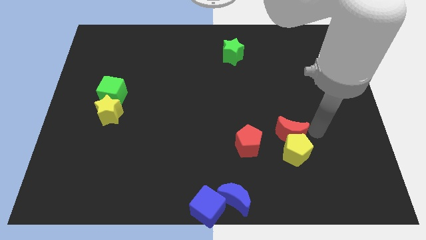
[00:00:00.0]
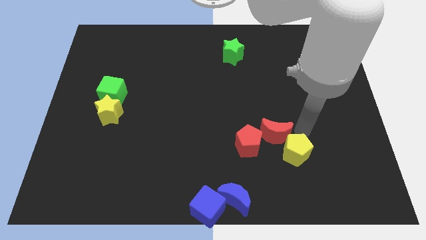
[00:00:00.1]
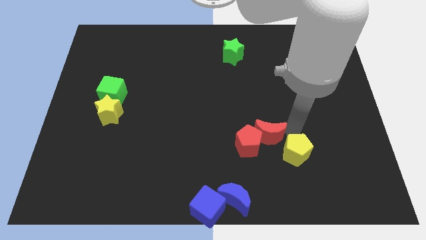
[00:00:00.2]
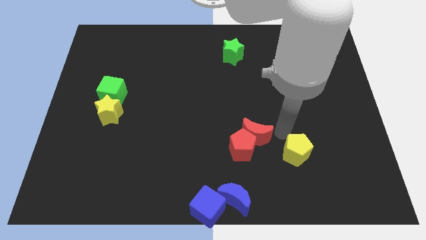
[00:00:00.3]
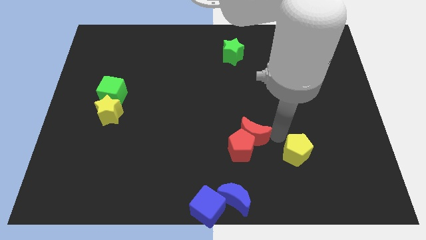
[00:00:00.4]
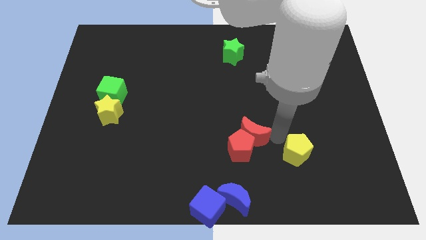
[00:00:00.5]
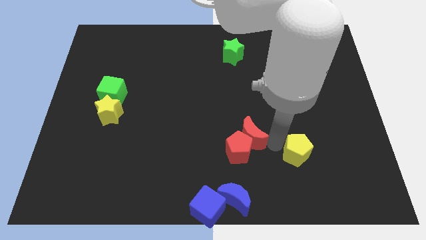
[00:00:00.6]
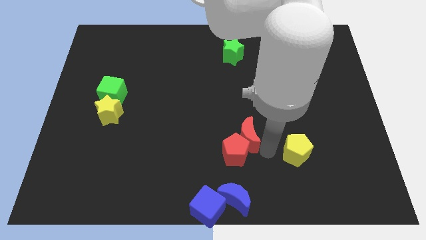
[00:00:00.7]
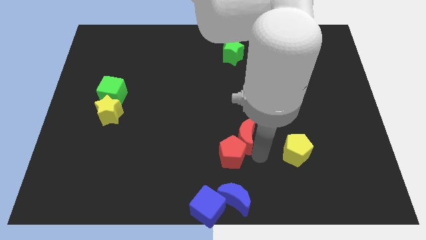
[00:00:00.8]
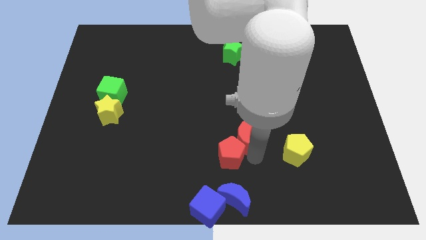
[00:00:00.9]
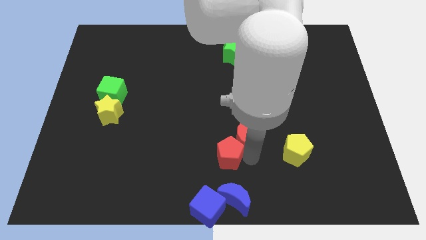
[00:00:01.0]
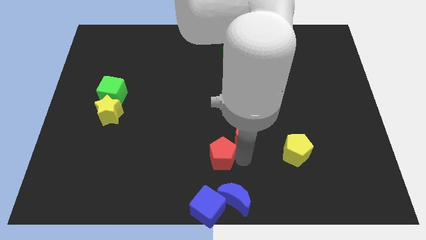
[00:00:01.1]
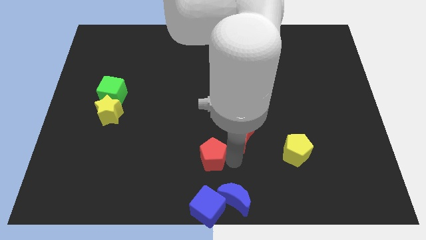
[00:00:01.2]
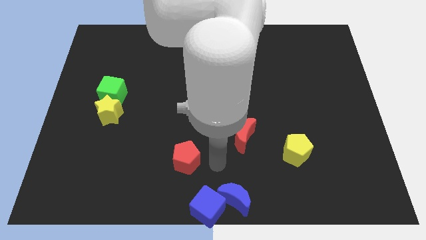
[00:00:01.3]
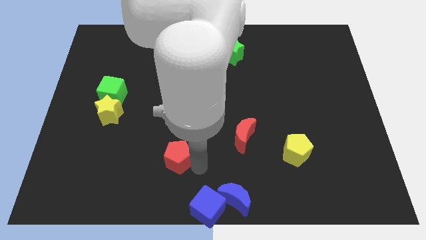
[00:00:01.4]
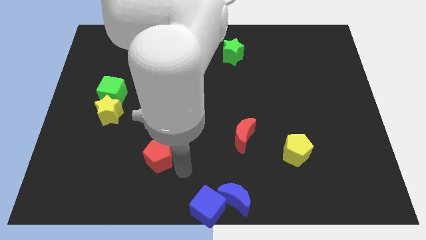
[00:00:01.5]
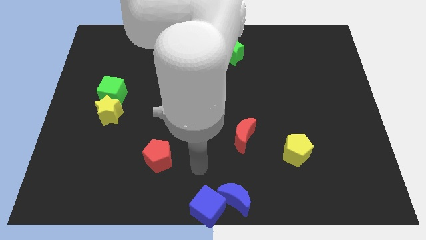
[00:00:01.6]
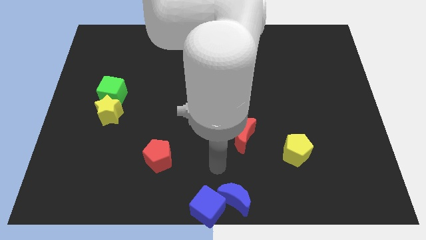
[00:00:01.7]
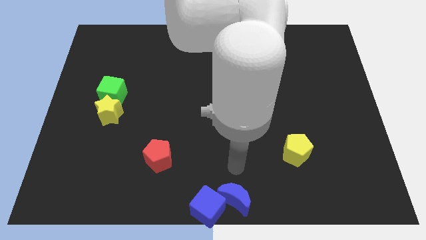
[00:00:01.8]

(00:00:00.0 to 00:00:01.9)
separate the red pentagon from the red moon

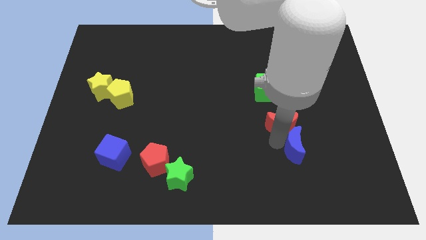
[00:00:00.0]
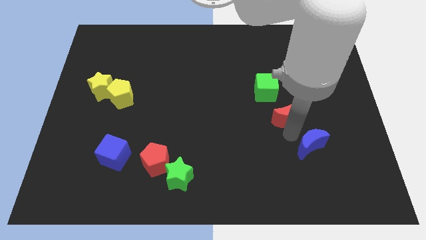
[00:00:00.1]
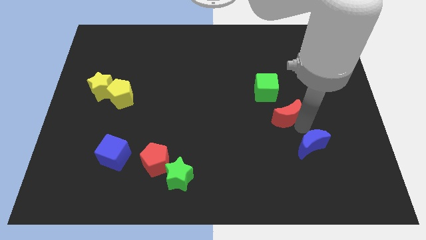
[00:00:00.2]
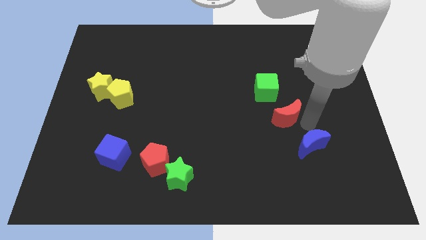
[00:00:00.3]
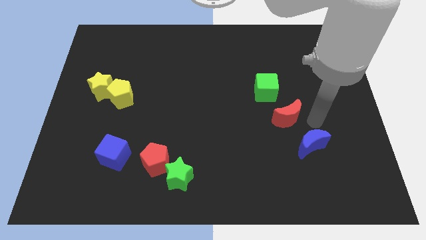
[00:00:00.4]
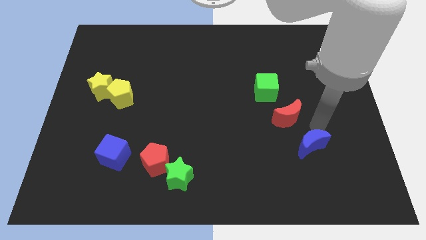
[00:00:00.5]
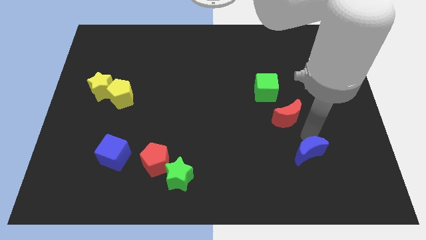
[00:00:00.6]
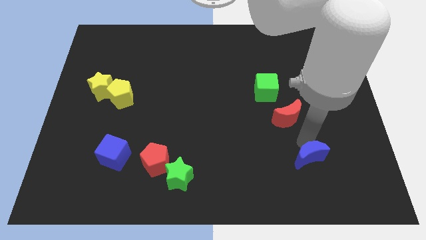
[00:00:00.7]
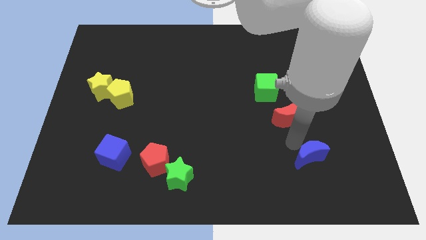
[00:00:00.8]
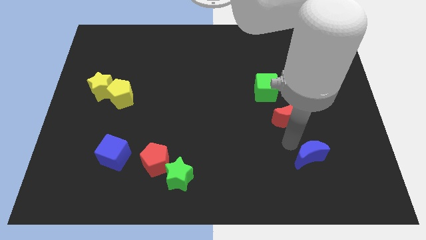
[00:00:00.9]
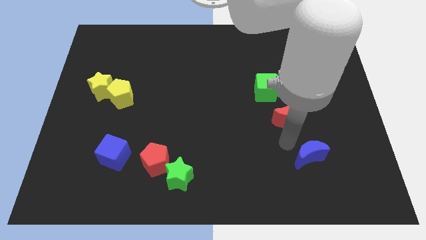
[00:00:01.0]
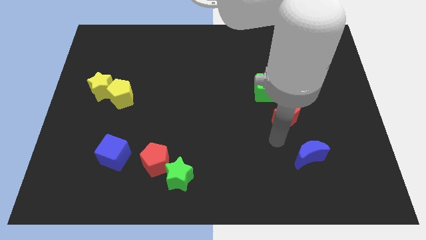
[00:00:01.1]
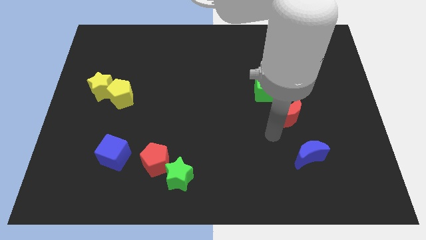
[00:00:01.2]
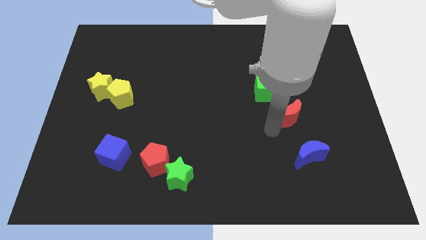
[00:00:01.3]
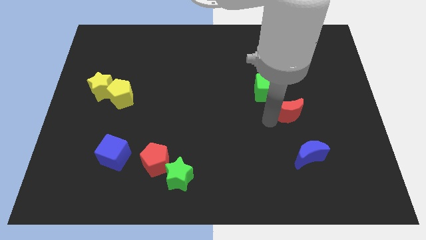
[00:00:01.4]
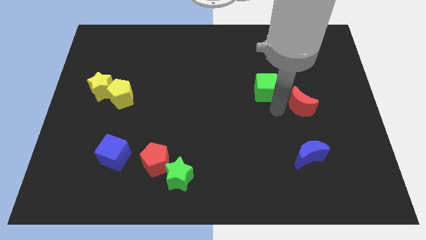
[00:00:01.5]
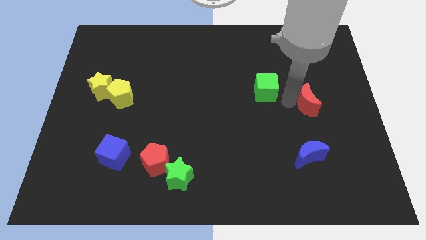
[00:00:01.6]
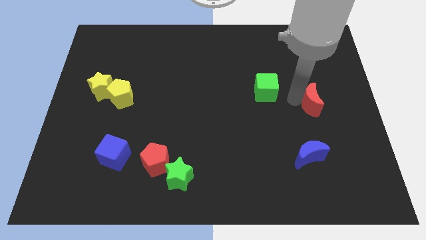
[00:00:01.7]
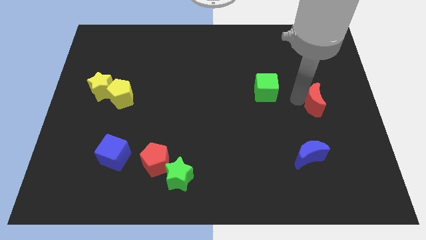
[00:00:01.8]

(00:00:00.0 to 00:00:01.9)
push the red crescent away from blue crescent to the right side of the board

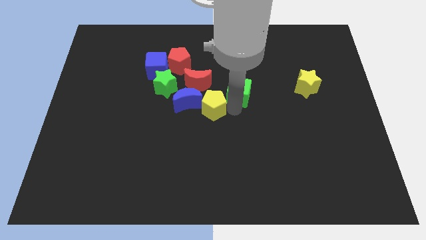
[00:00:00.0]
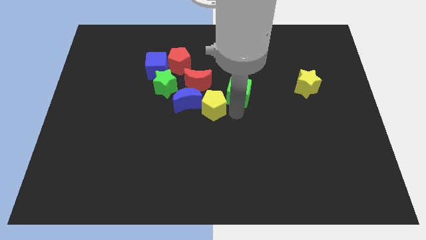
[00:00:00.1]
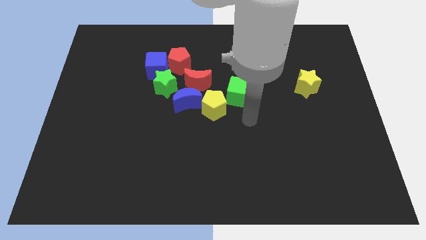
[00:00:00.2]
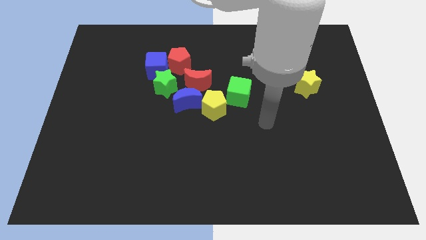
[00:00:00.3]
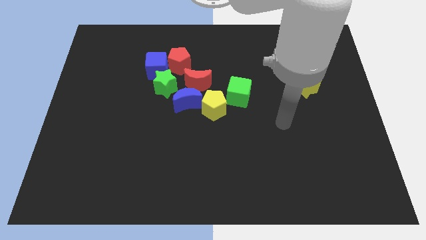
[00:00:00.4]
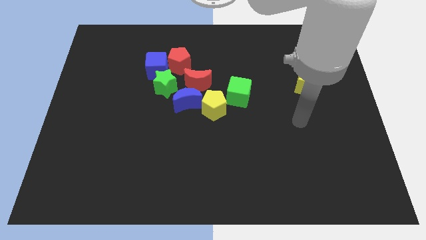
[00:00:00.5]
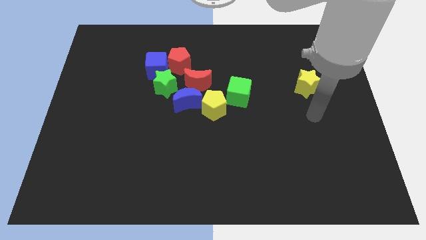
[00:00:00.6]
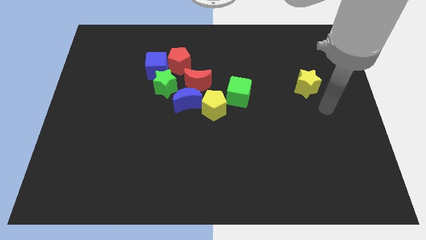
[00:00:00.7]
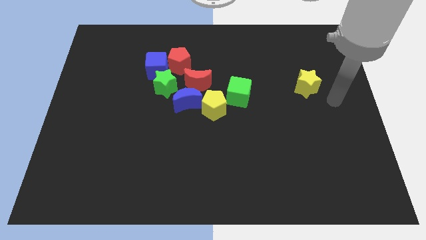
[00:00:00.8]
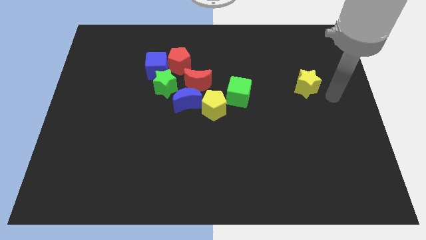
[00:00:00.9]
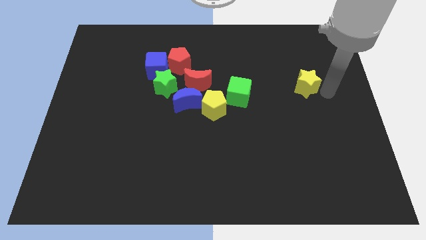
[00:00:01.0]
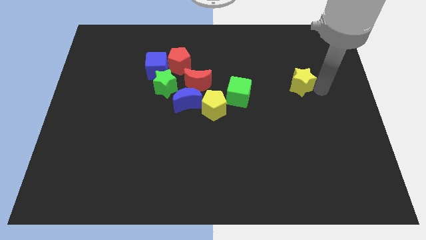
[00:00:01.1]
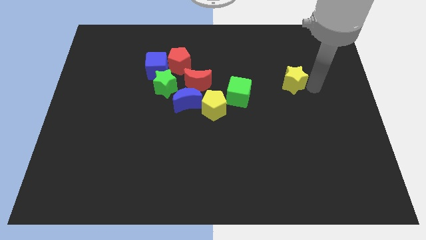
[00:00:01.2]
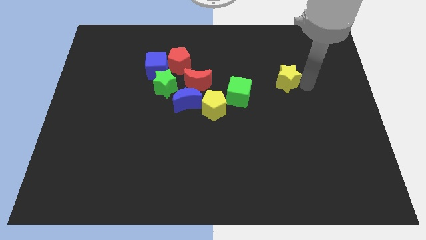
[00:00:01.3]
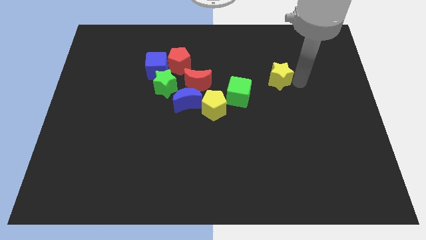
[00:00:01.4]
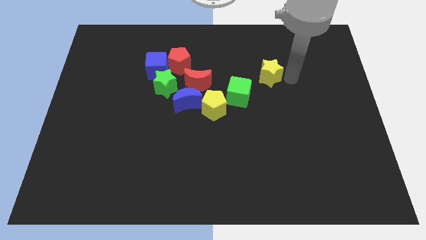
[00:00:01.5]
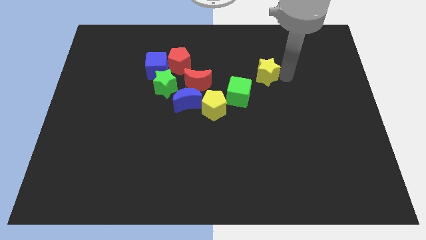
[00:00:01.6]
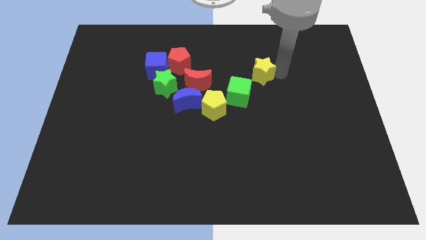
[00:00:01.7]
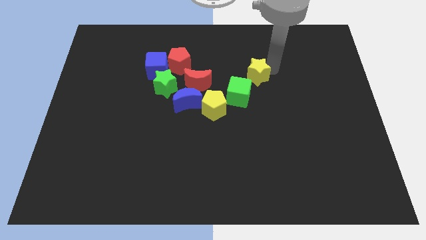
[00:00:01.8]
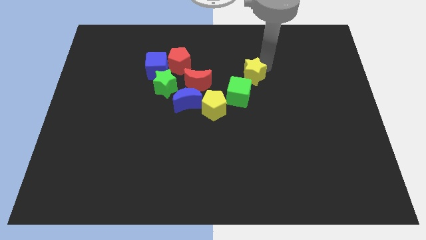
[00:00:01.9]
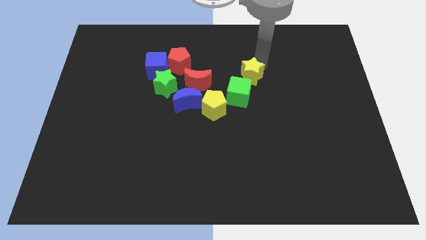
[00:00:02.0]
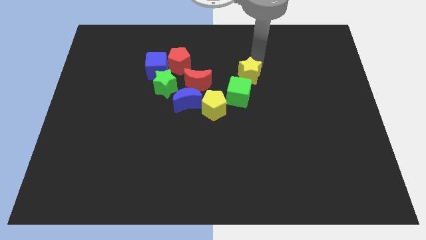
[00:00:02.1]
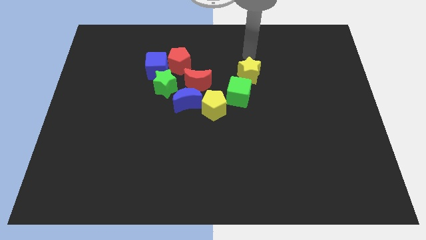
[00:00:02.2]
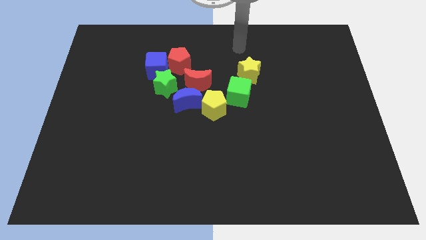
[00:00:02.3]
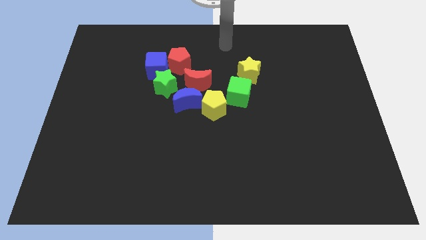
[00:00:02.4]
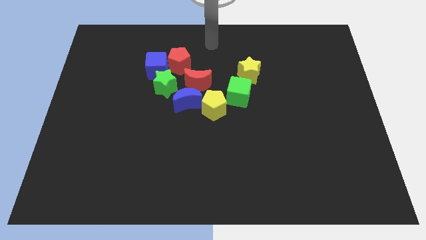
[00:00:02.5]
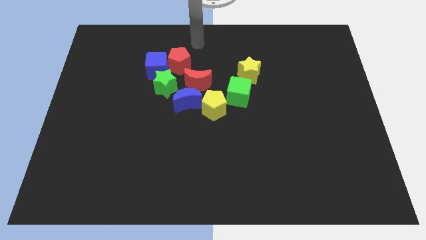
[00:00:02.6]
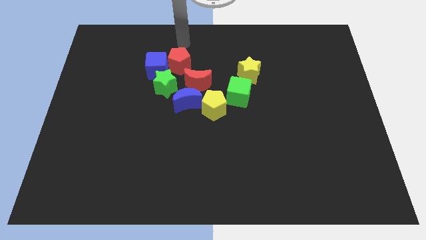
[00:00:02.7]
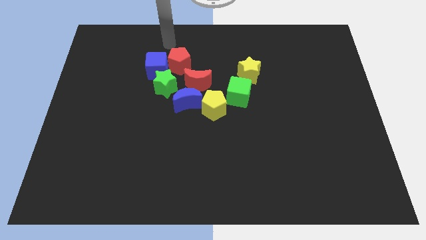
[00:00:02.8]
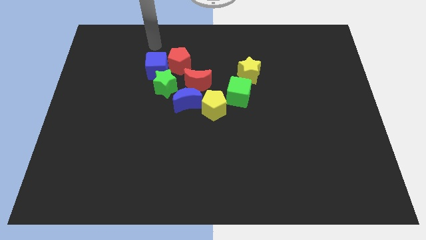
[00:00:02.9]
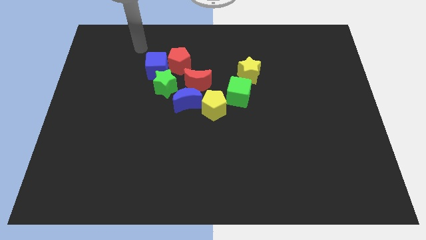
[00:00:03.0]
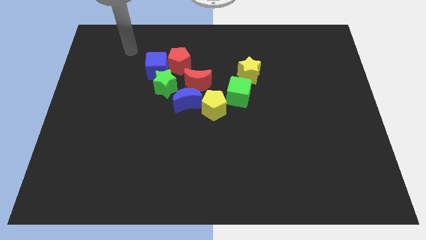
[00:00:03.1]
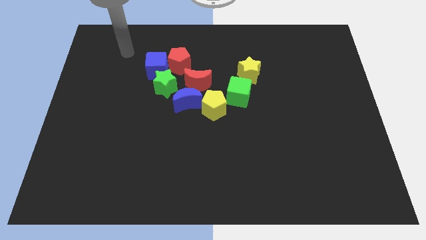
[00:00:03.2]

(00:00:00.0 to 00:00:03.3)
place the yellow star above the green cube

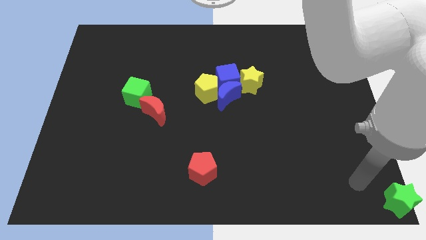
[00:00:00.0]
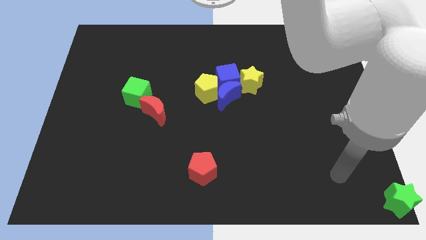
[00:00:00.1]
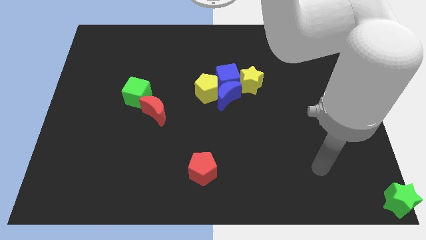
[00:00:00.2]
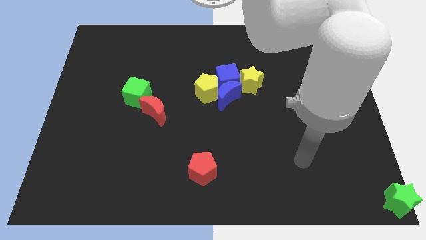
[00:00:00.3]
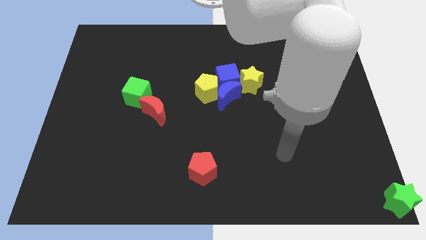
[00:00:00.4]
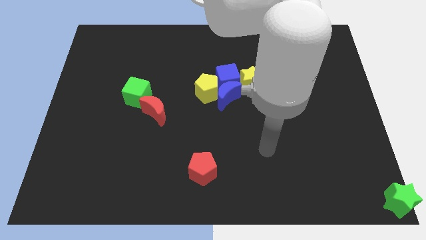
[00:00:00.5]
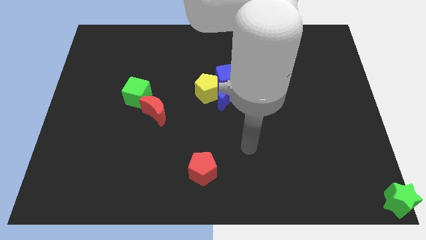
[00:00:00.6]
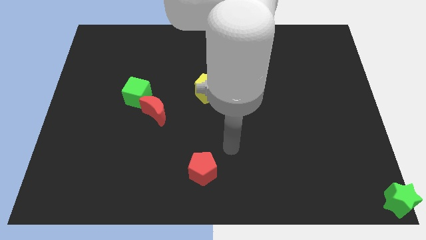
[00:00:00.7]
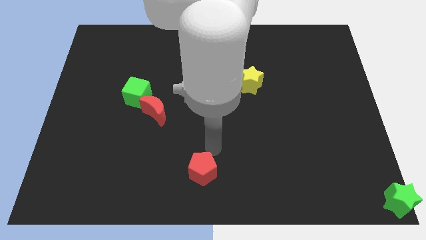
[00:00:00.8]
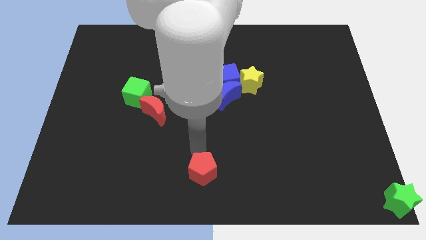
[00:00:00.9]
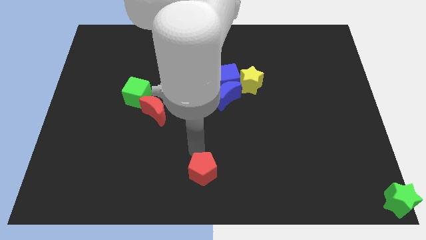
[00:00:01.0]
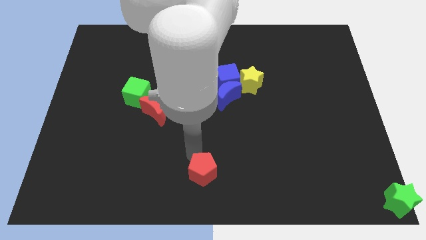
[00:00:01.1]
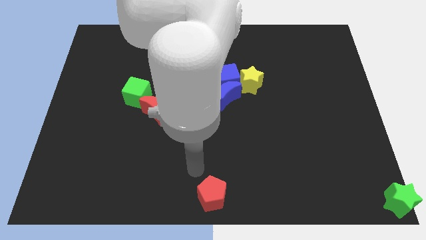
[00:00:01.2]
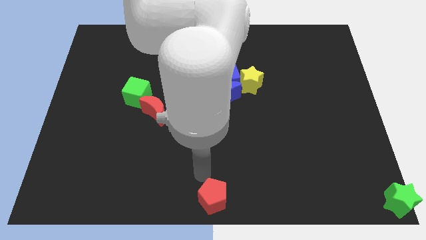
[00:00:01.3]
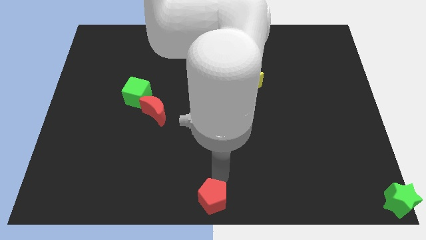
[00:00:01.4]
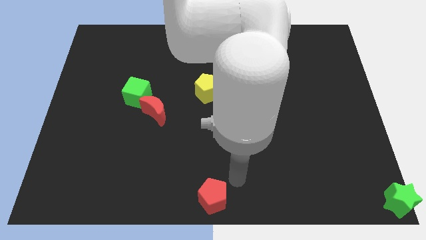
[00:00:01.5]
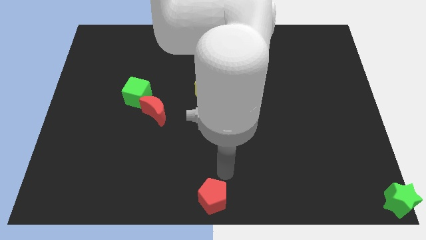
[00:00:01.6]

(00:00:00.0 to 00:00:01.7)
slightly move the red pentagon to the bottom center of the board

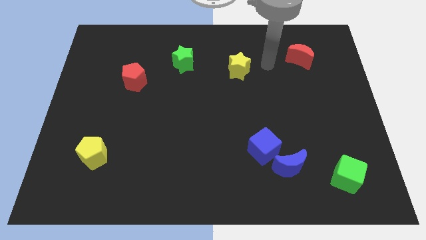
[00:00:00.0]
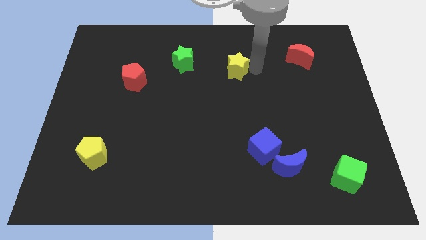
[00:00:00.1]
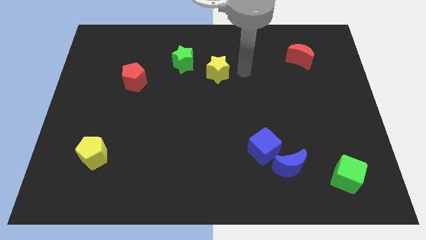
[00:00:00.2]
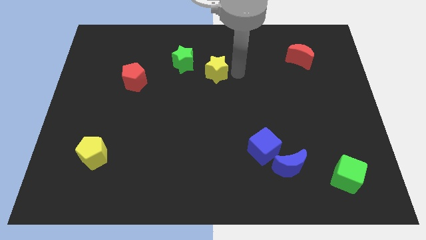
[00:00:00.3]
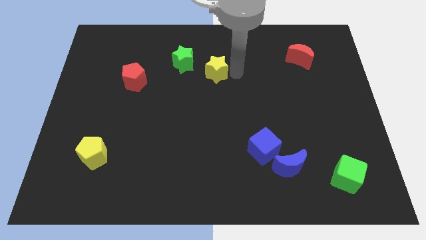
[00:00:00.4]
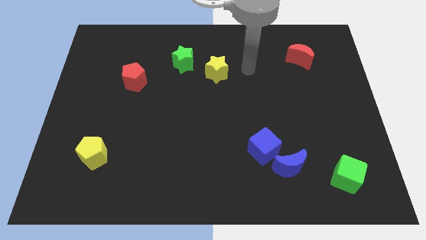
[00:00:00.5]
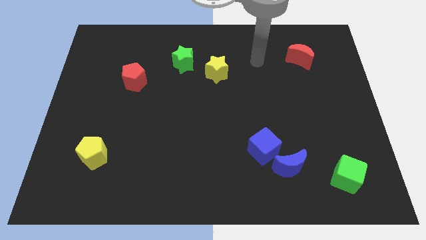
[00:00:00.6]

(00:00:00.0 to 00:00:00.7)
slightly move the yellow star towards green star
